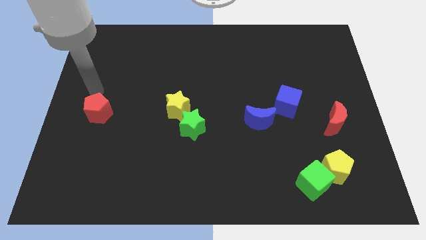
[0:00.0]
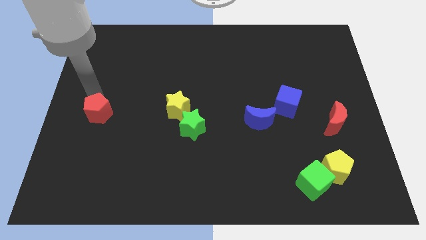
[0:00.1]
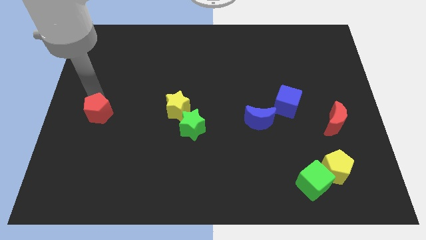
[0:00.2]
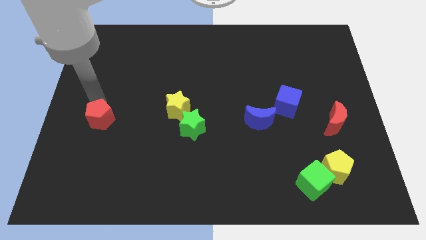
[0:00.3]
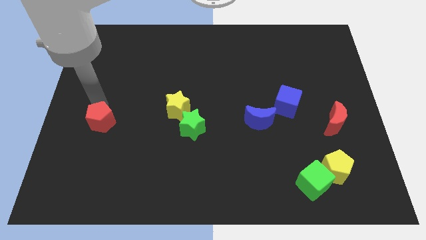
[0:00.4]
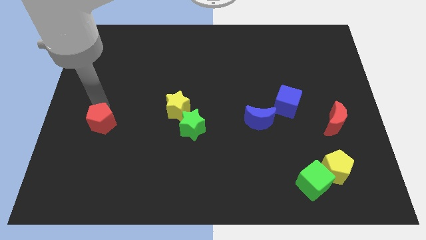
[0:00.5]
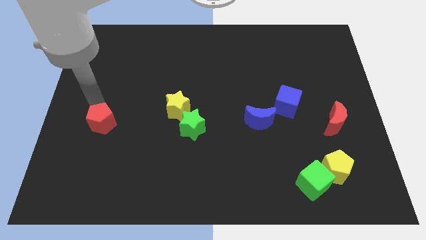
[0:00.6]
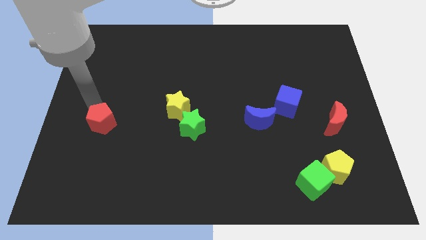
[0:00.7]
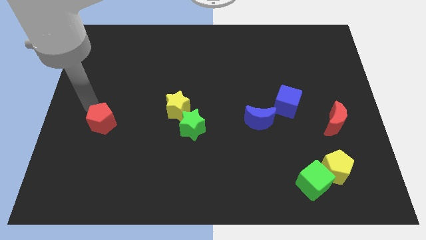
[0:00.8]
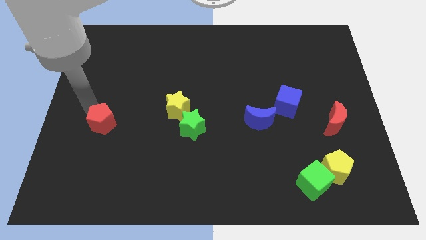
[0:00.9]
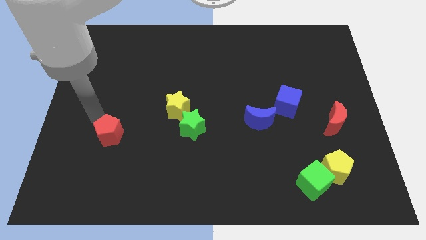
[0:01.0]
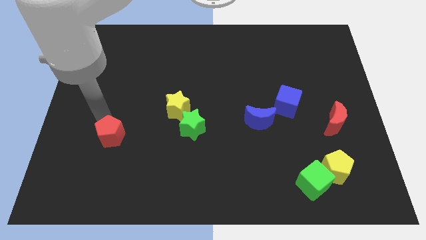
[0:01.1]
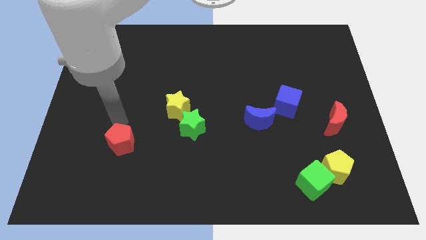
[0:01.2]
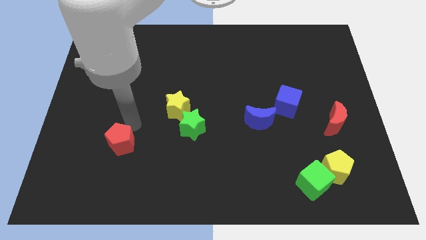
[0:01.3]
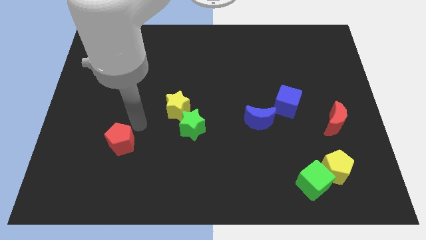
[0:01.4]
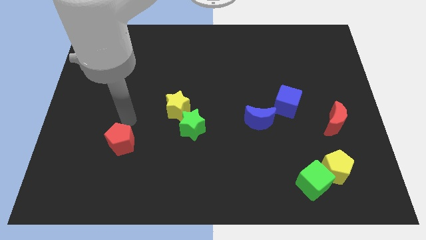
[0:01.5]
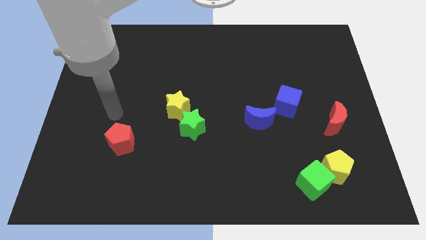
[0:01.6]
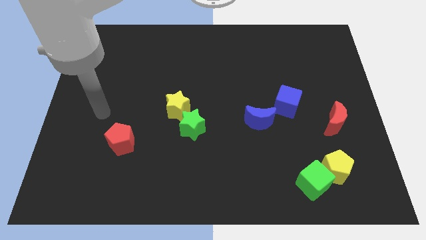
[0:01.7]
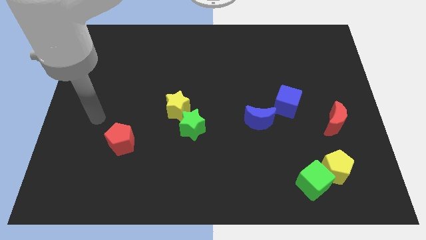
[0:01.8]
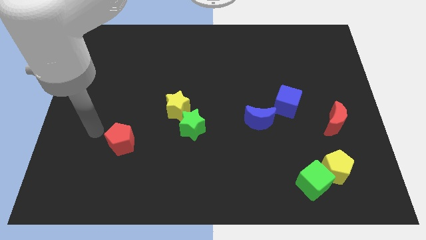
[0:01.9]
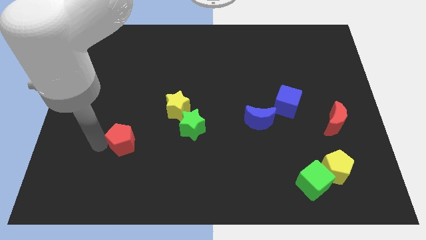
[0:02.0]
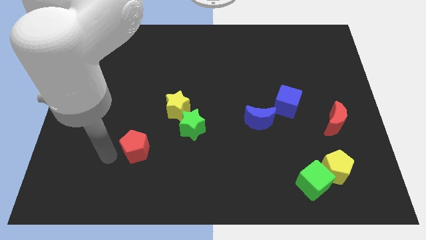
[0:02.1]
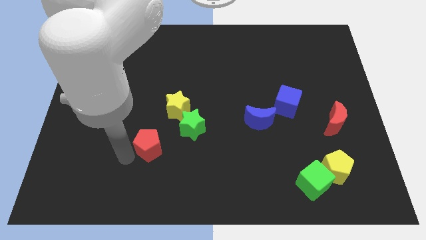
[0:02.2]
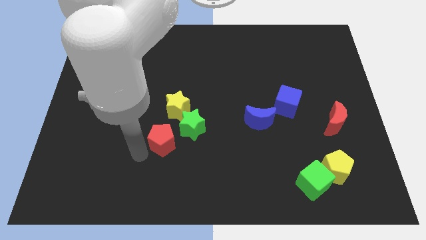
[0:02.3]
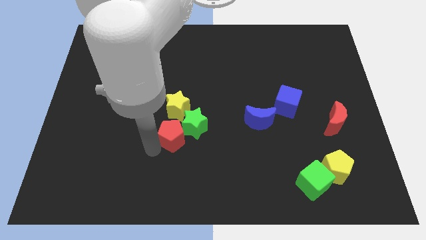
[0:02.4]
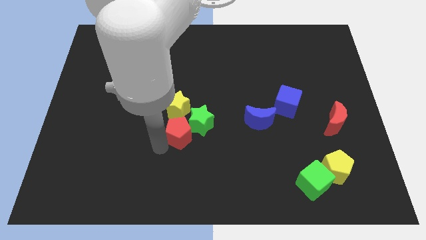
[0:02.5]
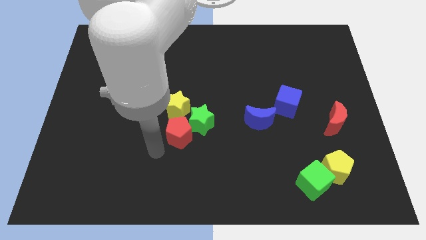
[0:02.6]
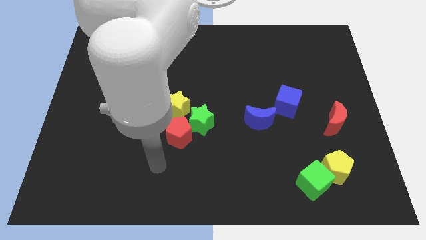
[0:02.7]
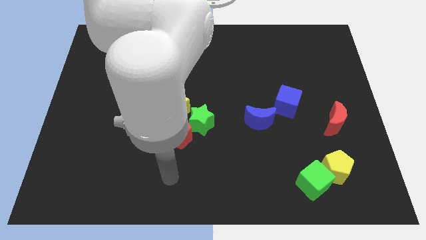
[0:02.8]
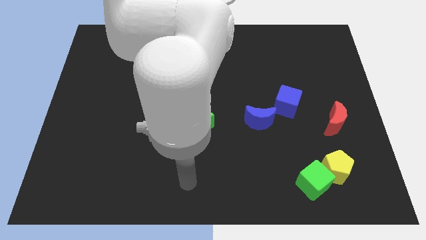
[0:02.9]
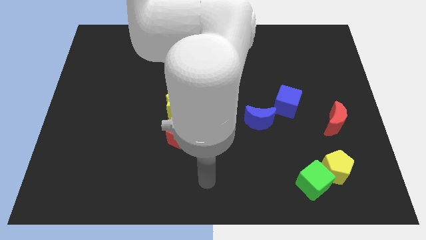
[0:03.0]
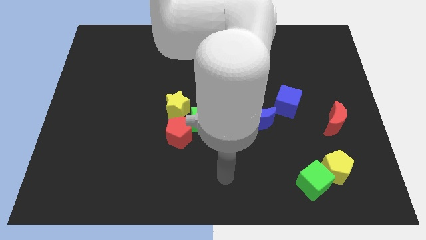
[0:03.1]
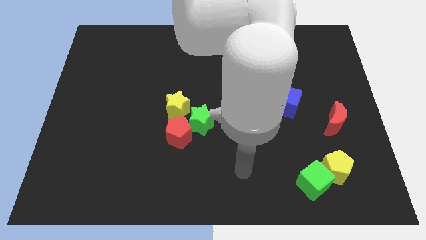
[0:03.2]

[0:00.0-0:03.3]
push the red pentagon into the green star

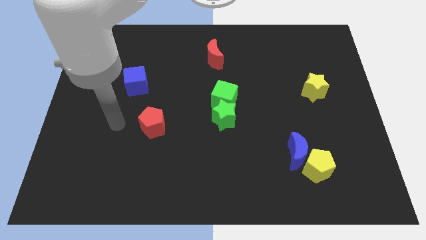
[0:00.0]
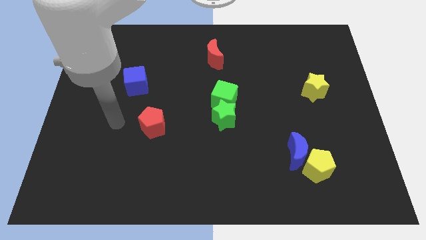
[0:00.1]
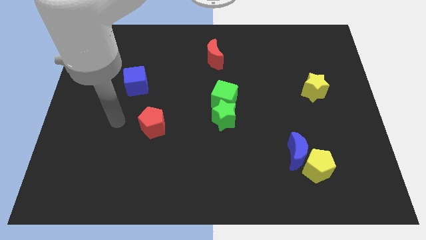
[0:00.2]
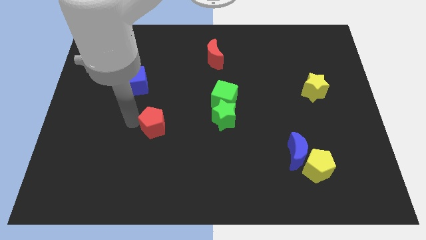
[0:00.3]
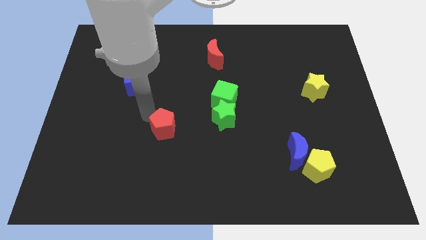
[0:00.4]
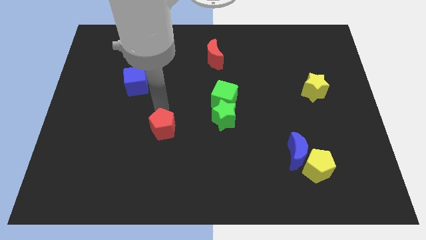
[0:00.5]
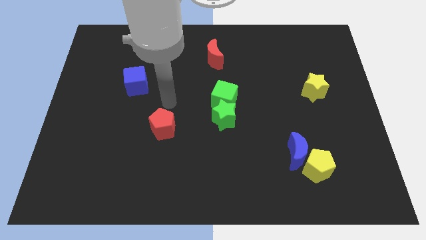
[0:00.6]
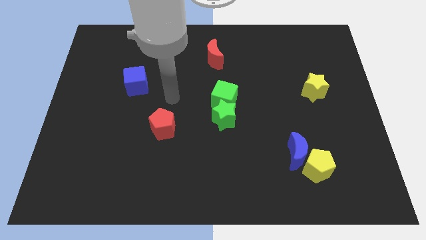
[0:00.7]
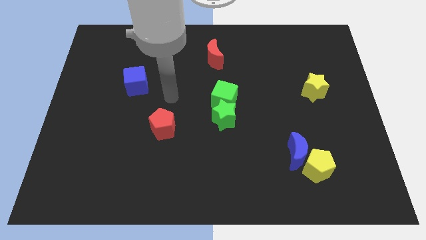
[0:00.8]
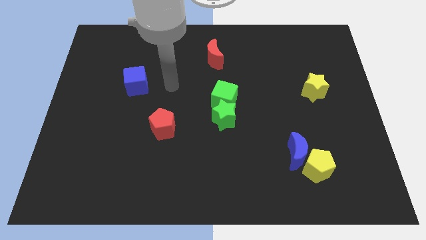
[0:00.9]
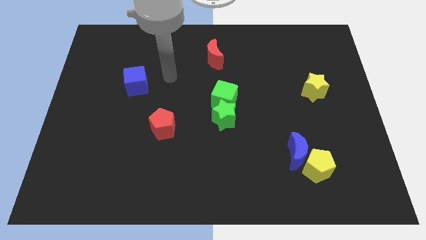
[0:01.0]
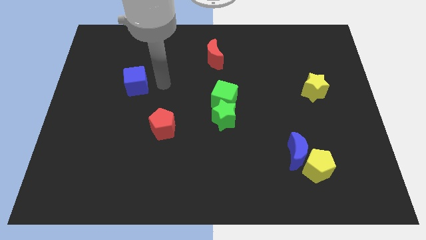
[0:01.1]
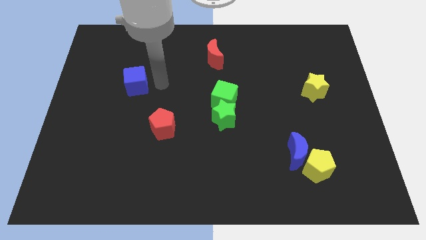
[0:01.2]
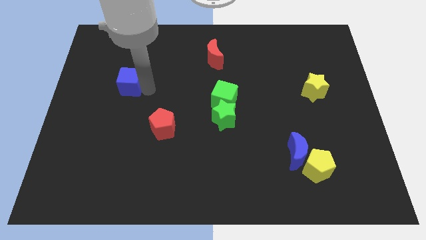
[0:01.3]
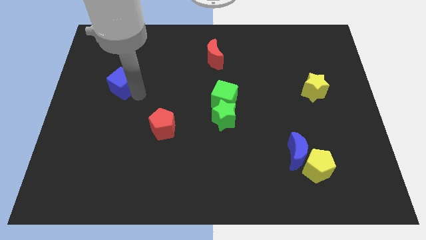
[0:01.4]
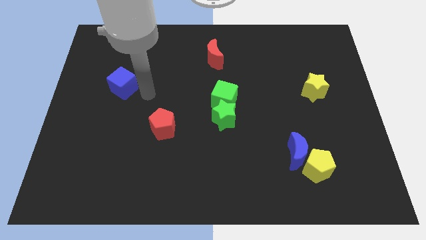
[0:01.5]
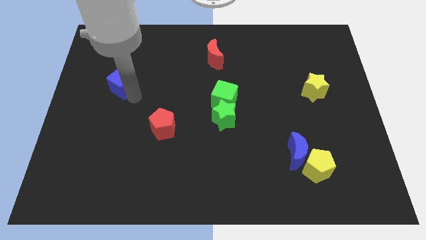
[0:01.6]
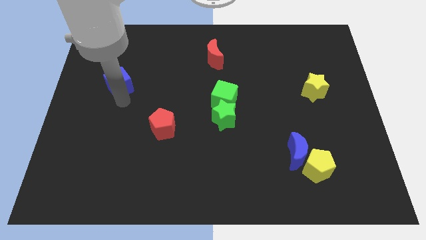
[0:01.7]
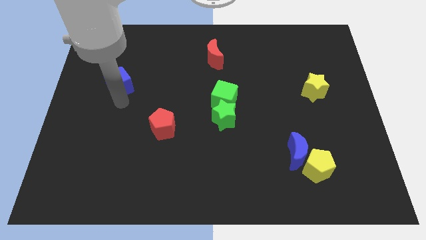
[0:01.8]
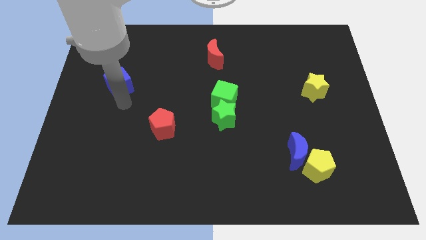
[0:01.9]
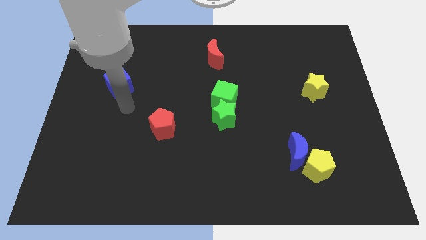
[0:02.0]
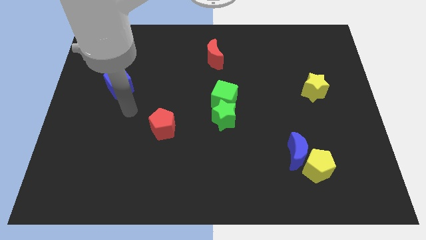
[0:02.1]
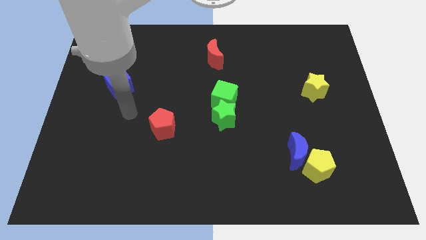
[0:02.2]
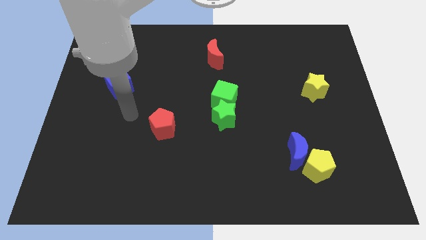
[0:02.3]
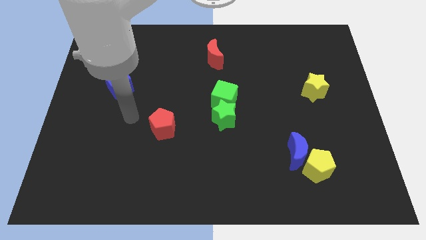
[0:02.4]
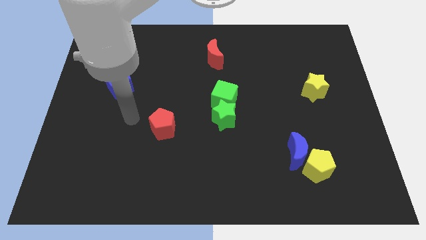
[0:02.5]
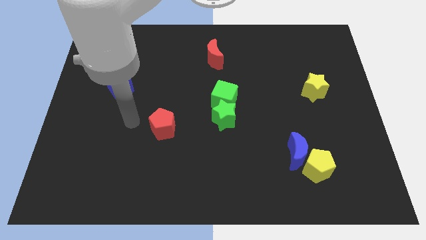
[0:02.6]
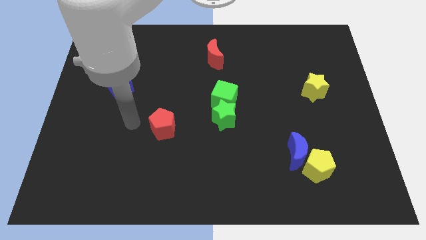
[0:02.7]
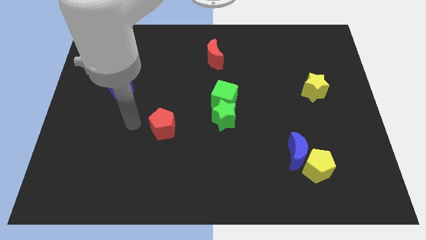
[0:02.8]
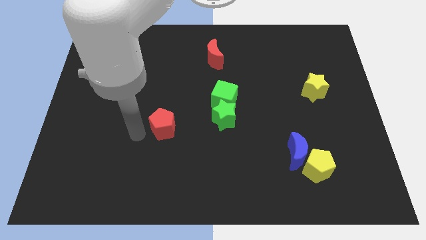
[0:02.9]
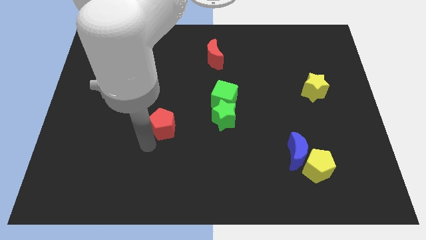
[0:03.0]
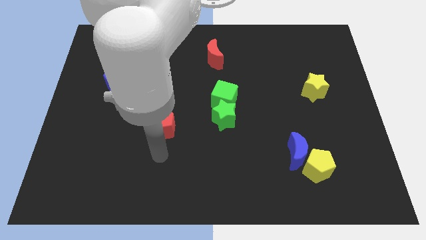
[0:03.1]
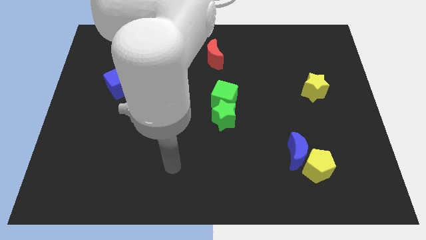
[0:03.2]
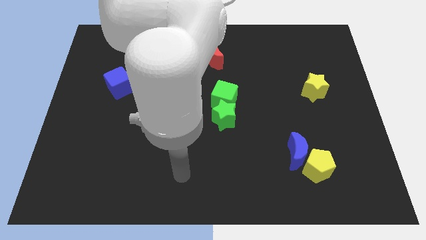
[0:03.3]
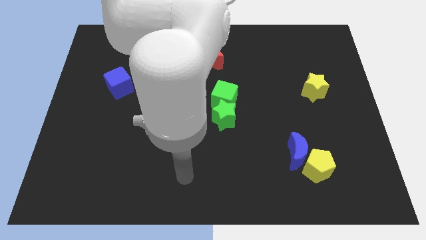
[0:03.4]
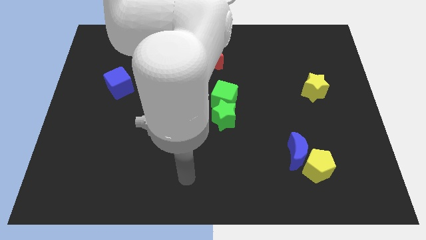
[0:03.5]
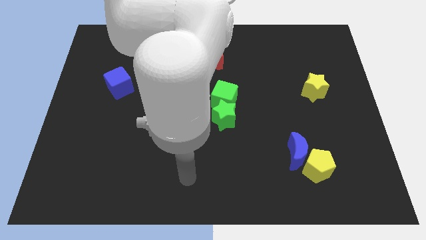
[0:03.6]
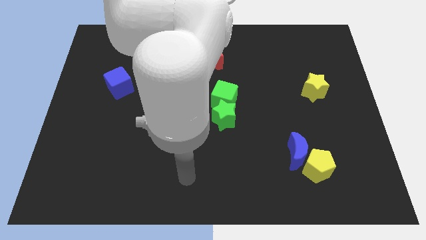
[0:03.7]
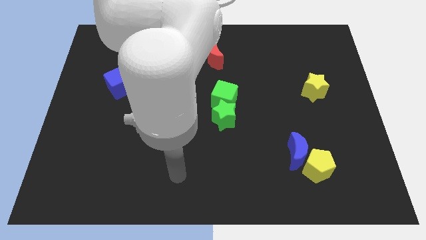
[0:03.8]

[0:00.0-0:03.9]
separate the blue cube and red pentagon

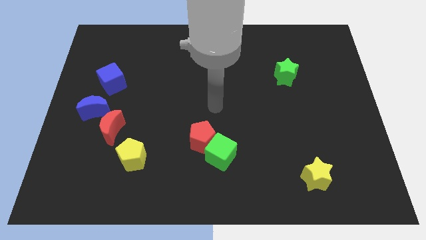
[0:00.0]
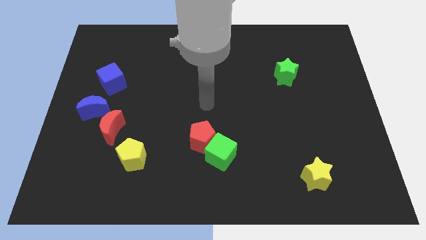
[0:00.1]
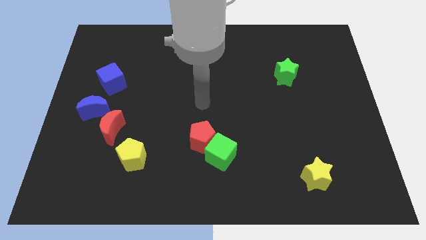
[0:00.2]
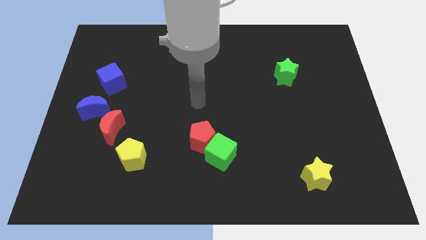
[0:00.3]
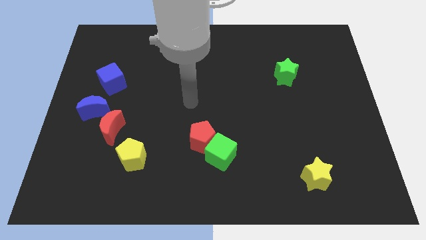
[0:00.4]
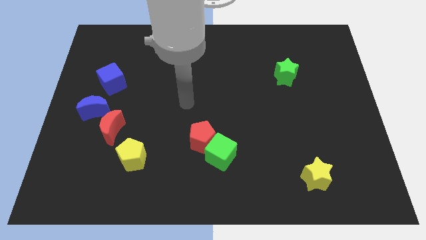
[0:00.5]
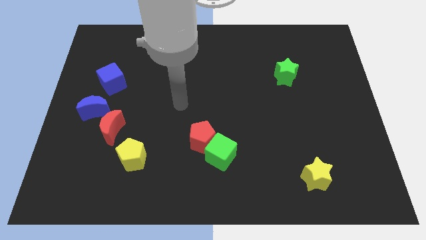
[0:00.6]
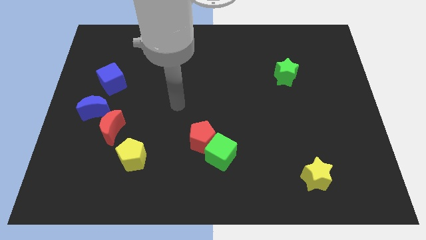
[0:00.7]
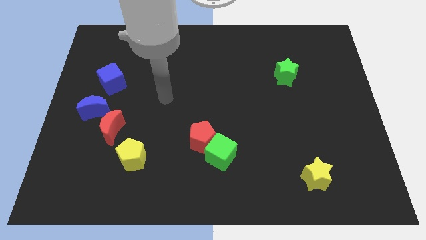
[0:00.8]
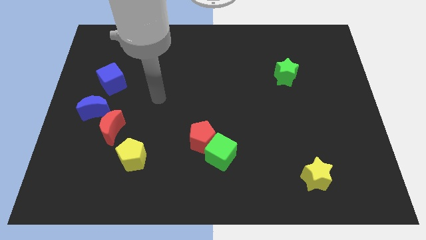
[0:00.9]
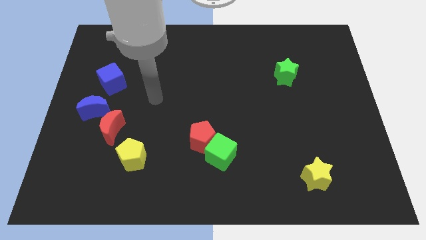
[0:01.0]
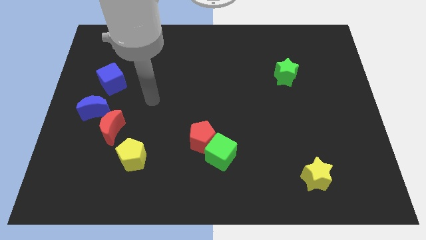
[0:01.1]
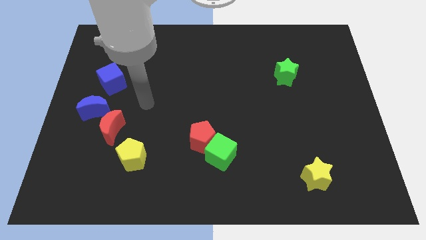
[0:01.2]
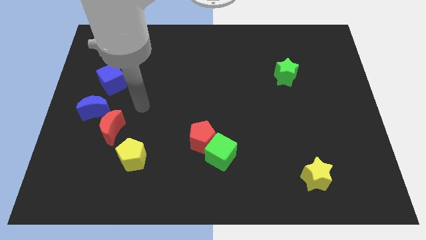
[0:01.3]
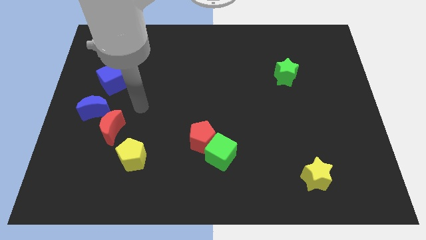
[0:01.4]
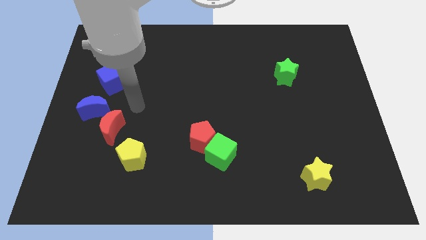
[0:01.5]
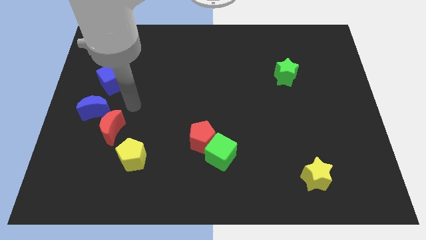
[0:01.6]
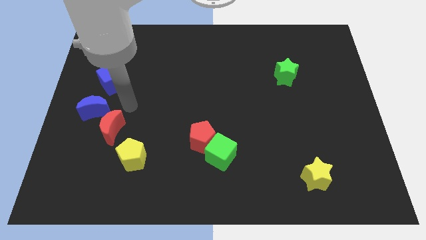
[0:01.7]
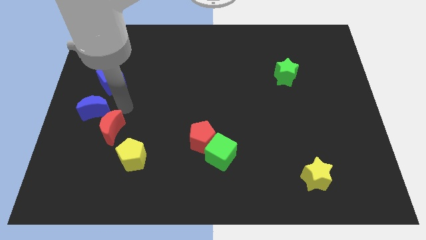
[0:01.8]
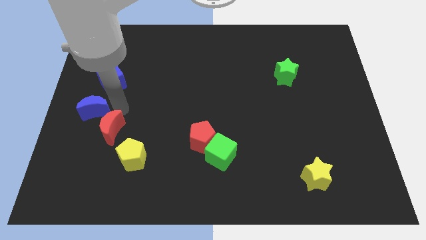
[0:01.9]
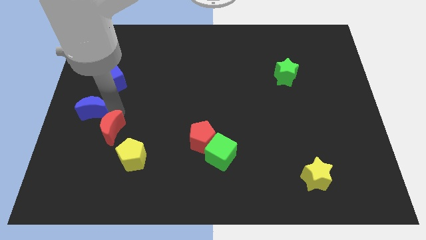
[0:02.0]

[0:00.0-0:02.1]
point the arm to the top of the red crescent
